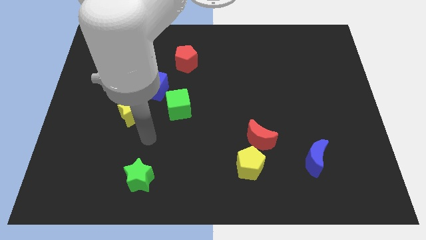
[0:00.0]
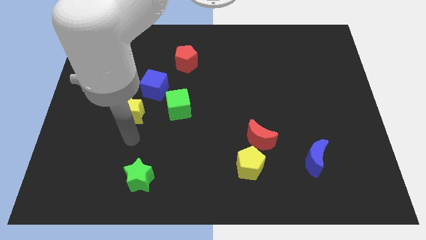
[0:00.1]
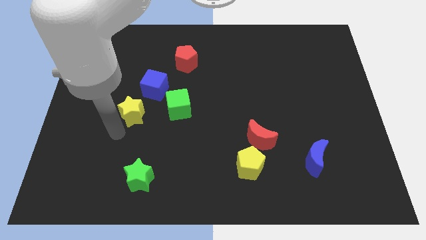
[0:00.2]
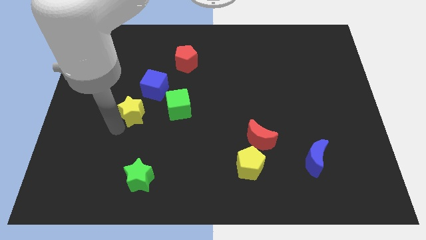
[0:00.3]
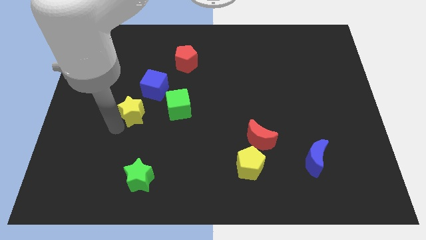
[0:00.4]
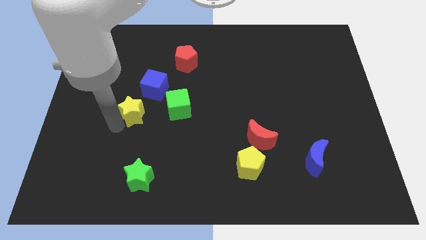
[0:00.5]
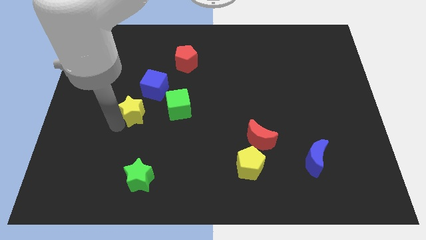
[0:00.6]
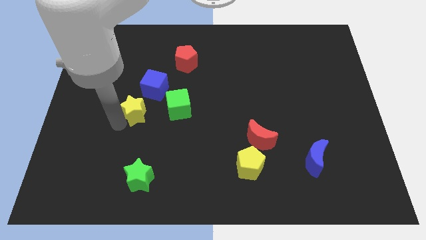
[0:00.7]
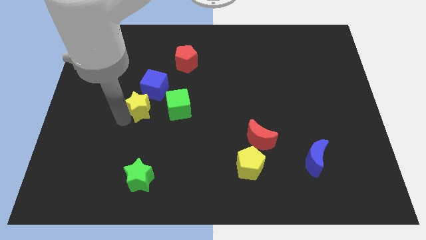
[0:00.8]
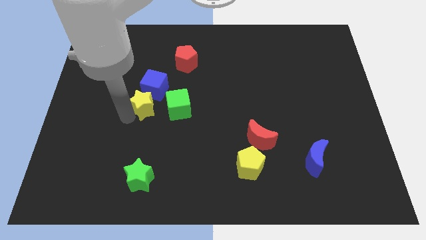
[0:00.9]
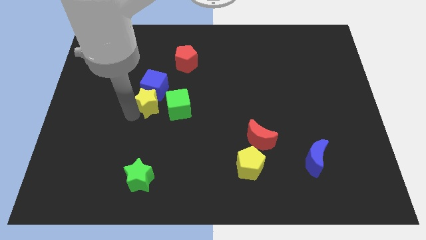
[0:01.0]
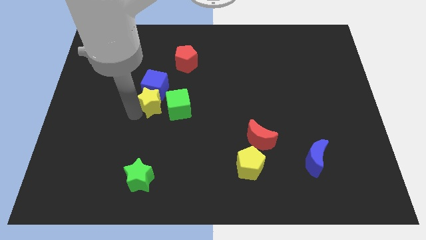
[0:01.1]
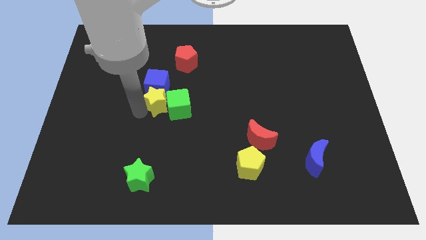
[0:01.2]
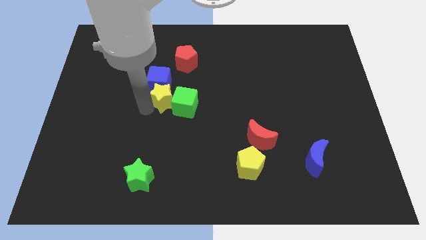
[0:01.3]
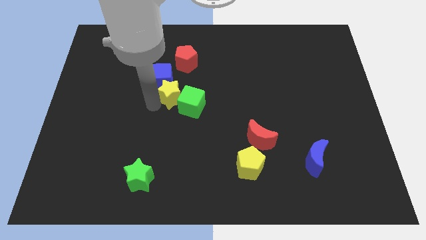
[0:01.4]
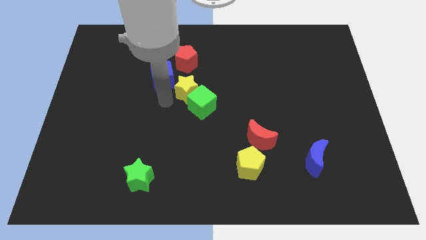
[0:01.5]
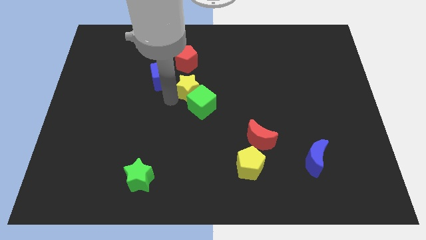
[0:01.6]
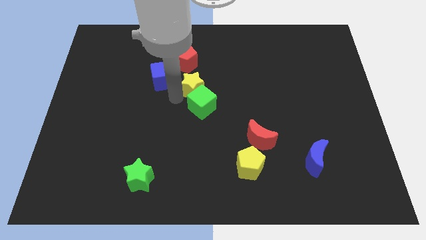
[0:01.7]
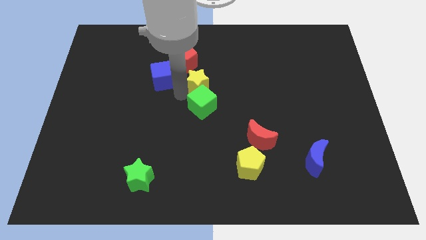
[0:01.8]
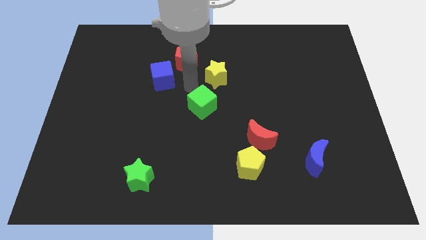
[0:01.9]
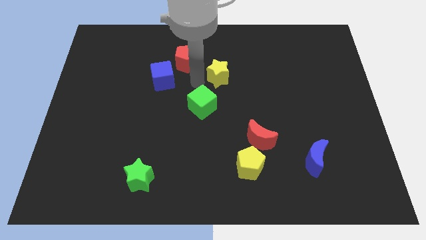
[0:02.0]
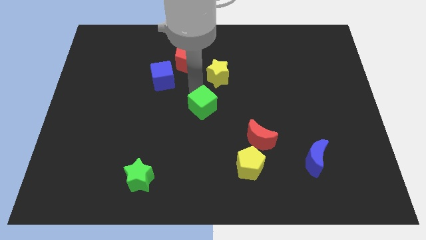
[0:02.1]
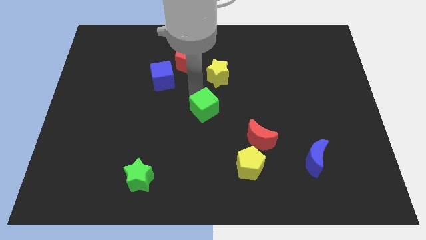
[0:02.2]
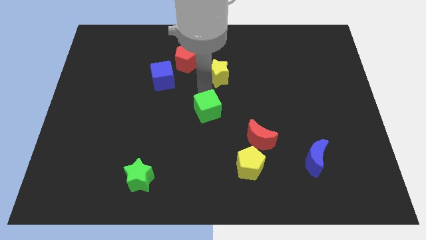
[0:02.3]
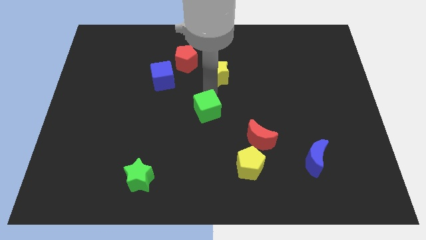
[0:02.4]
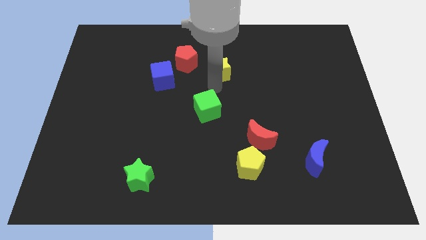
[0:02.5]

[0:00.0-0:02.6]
slightly touch down the green cube

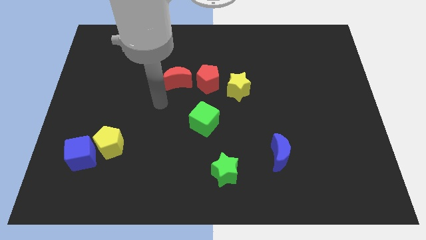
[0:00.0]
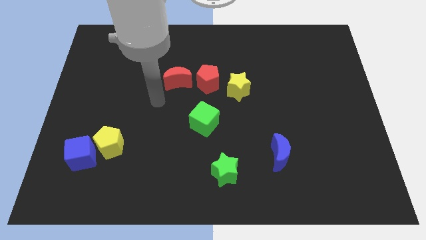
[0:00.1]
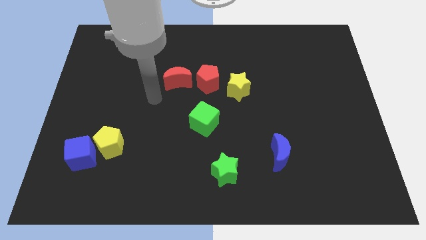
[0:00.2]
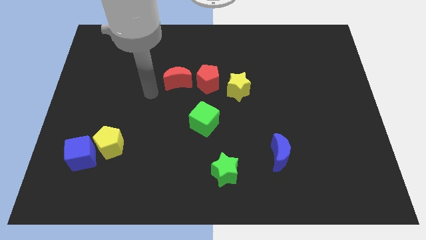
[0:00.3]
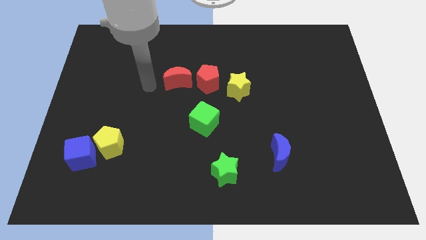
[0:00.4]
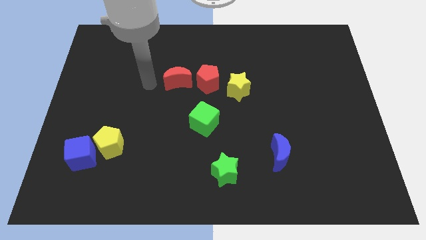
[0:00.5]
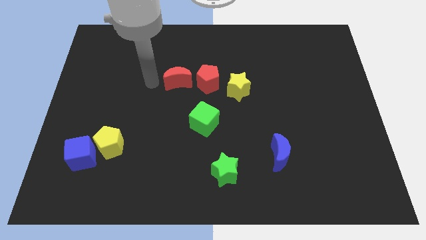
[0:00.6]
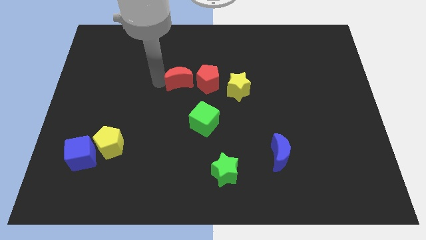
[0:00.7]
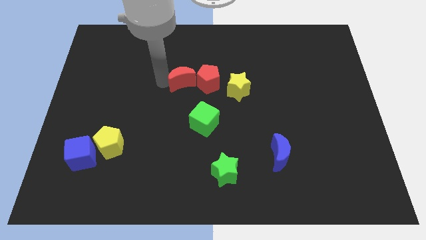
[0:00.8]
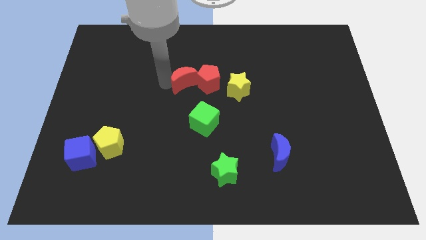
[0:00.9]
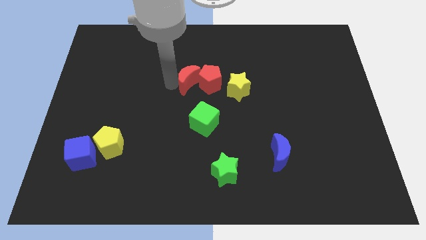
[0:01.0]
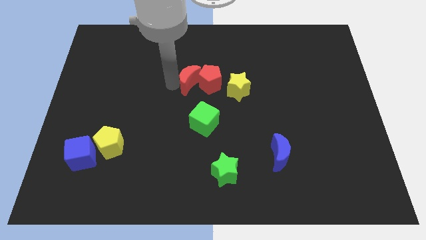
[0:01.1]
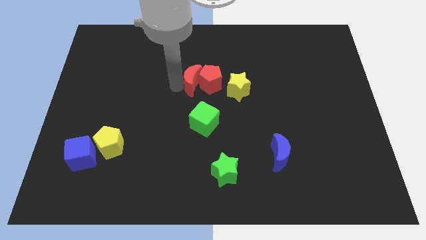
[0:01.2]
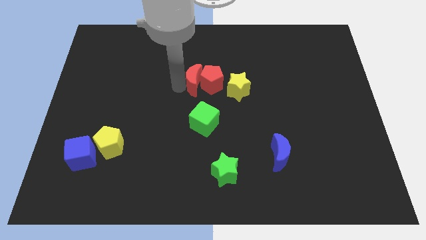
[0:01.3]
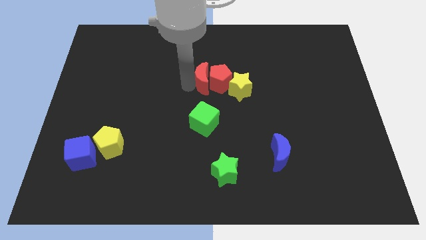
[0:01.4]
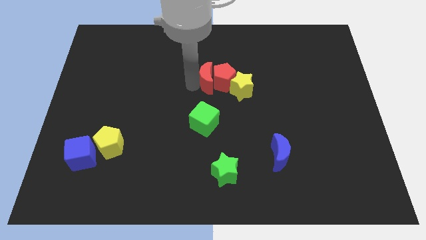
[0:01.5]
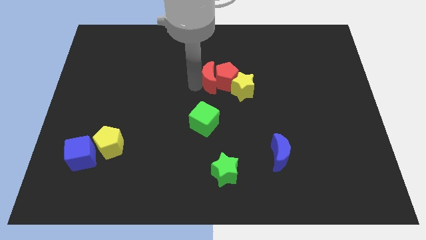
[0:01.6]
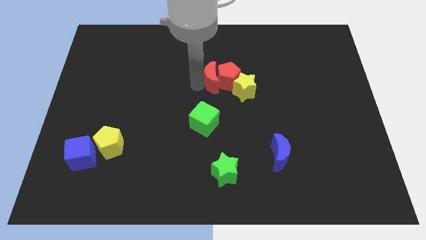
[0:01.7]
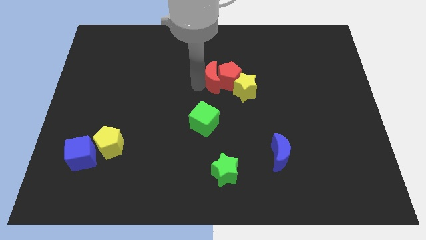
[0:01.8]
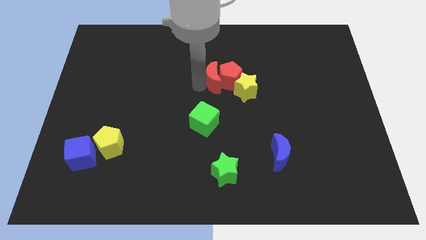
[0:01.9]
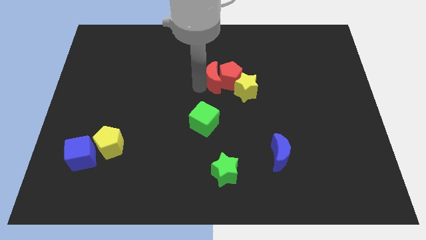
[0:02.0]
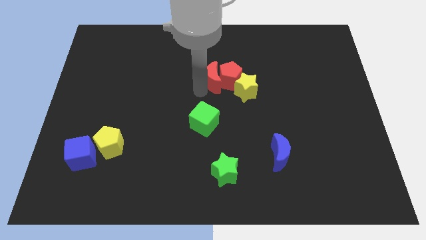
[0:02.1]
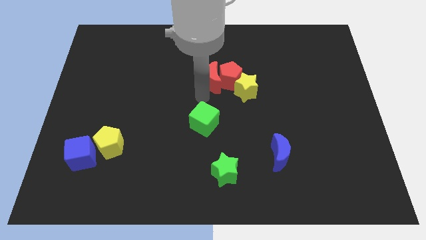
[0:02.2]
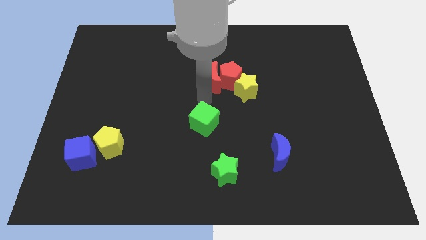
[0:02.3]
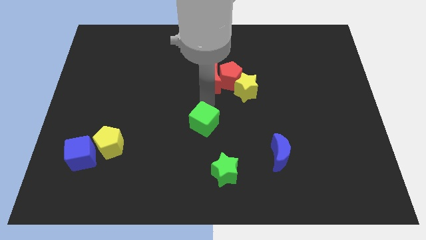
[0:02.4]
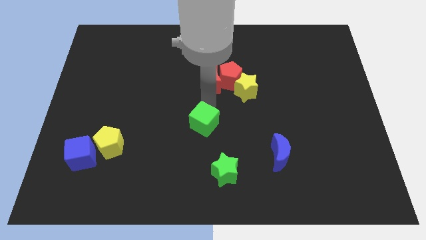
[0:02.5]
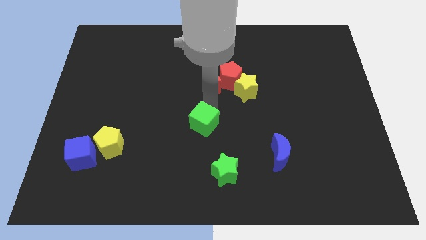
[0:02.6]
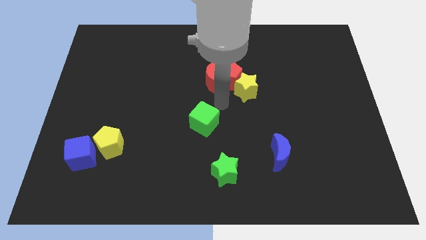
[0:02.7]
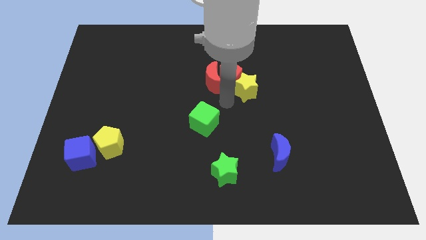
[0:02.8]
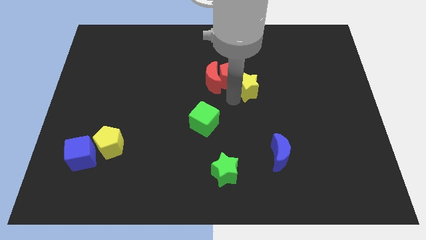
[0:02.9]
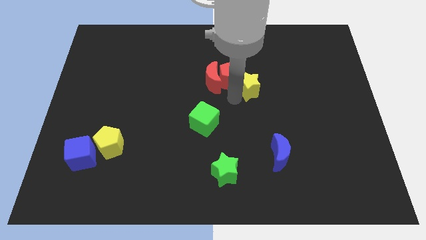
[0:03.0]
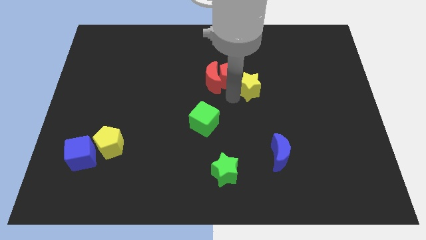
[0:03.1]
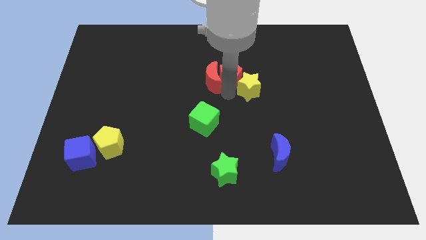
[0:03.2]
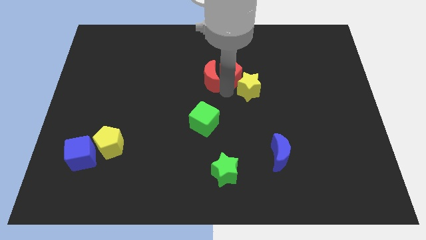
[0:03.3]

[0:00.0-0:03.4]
push the red blocks and yellow star towards the center

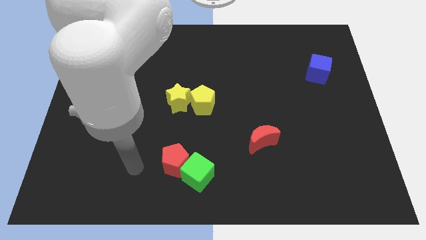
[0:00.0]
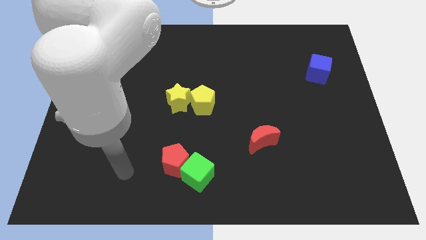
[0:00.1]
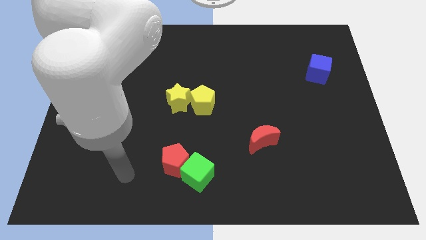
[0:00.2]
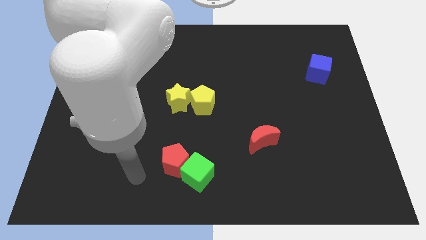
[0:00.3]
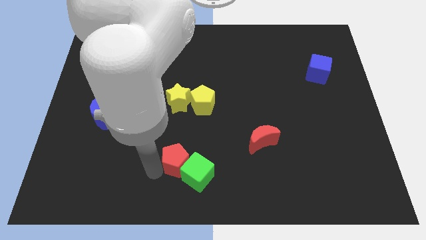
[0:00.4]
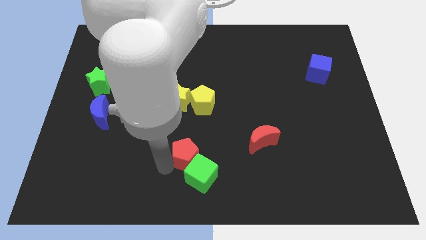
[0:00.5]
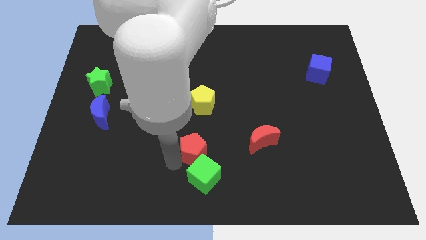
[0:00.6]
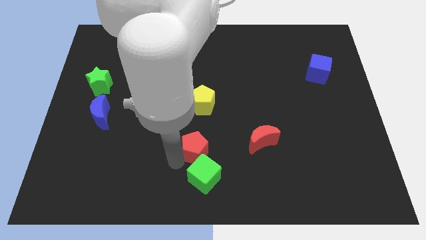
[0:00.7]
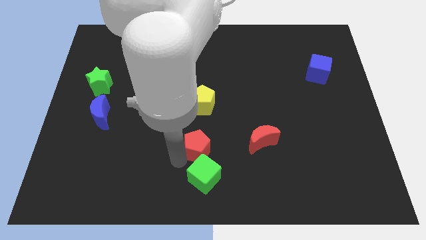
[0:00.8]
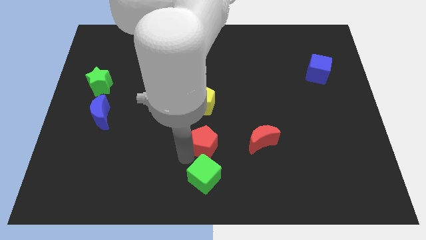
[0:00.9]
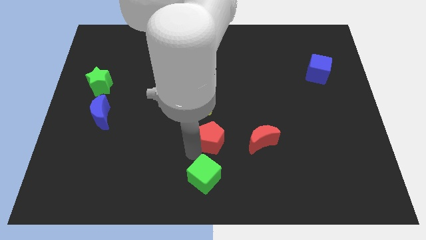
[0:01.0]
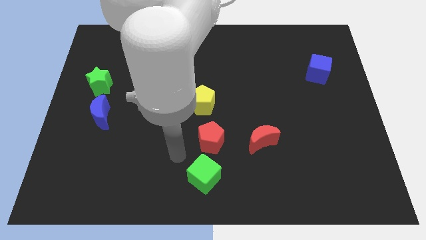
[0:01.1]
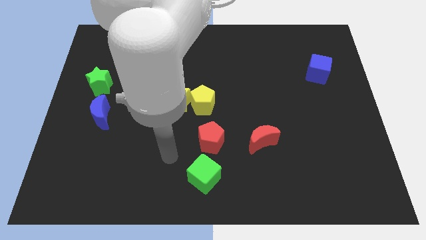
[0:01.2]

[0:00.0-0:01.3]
push the red pentagon to the top of the green cube

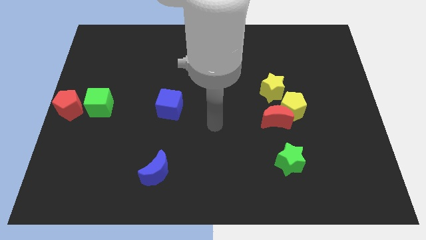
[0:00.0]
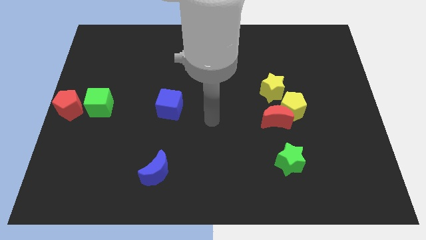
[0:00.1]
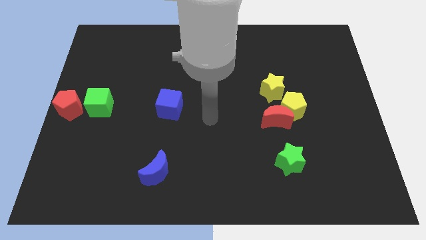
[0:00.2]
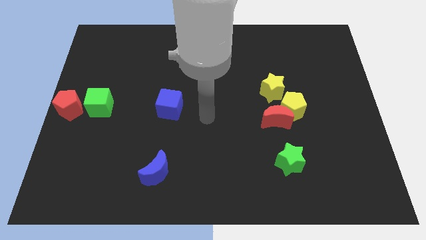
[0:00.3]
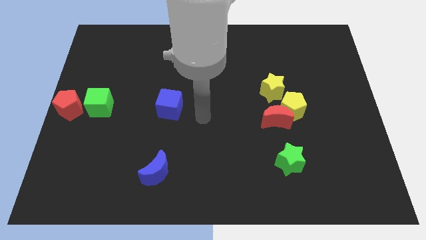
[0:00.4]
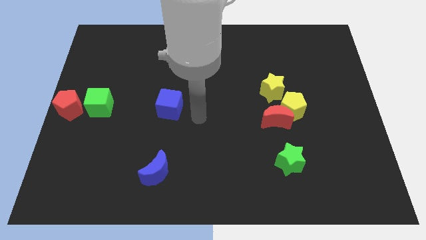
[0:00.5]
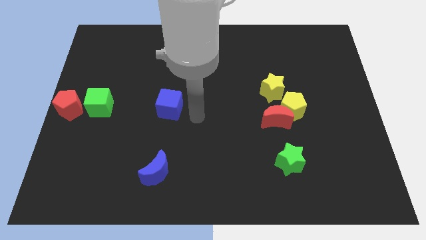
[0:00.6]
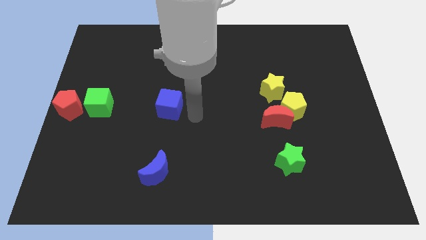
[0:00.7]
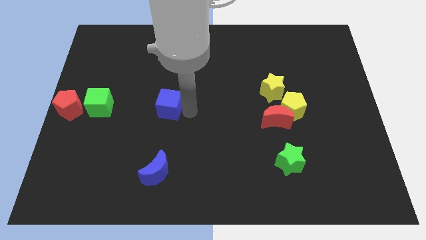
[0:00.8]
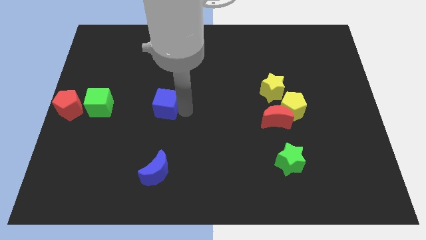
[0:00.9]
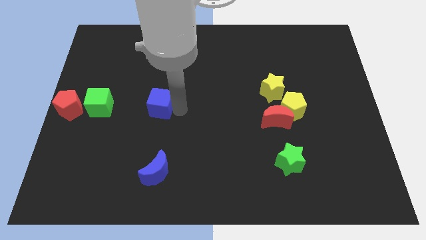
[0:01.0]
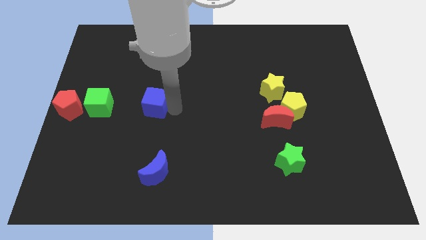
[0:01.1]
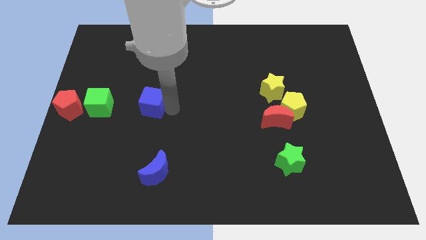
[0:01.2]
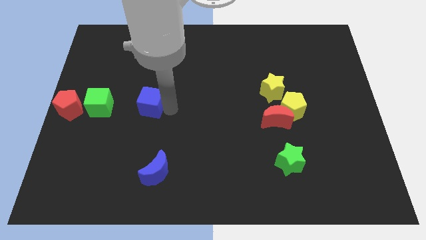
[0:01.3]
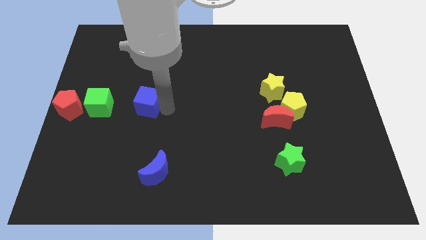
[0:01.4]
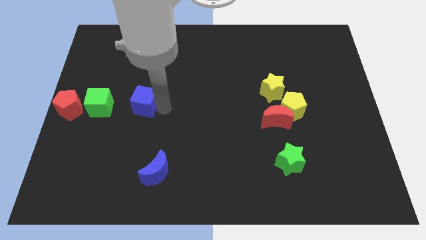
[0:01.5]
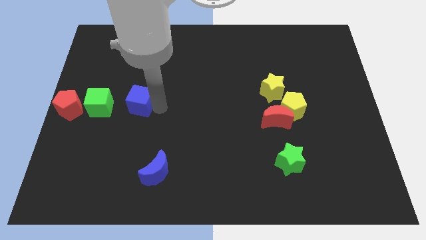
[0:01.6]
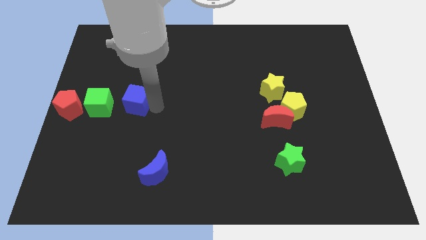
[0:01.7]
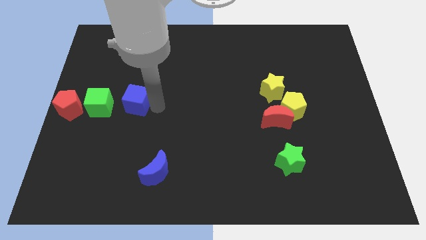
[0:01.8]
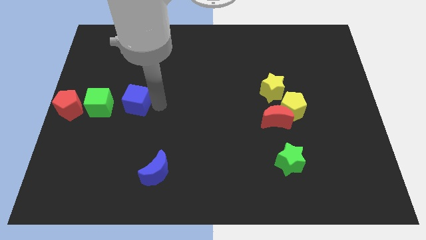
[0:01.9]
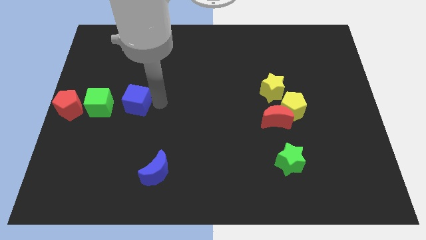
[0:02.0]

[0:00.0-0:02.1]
push blue cube towards green cube
